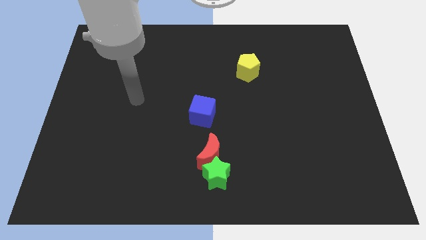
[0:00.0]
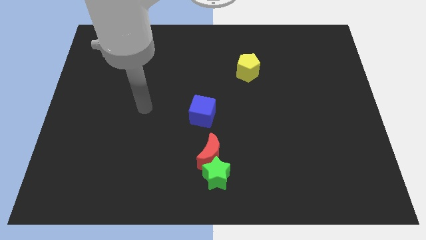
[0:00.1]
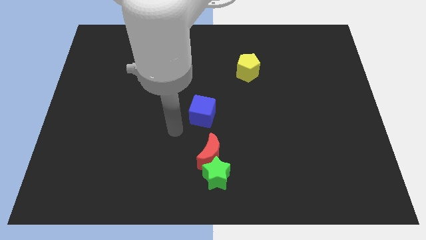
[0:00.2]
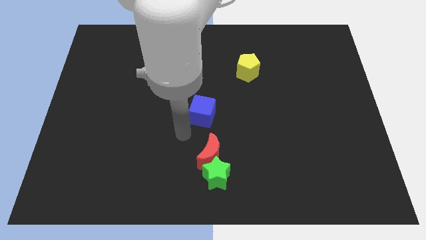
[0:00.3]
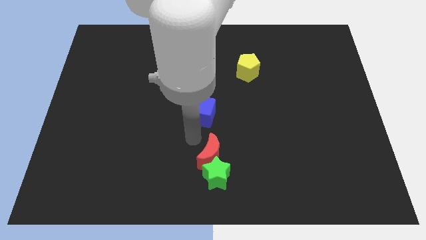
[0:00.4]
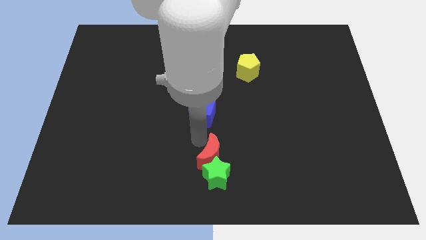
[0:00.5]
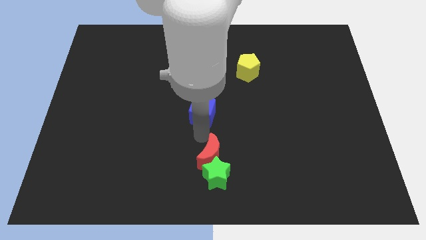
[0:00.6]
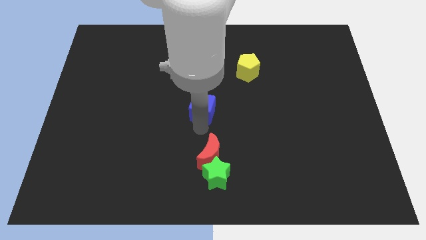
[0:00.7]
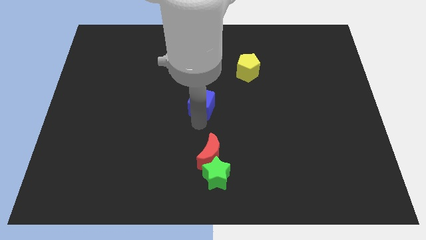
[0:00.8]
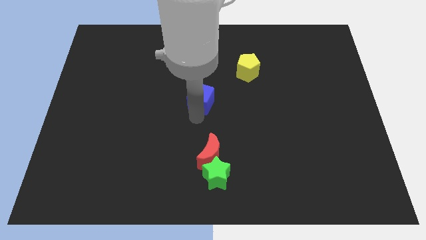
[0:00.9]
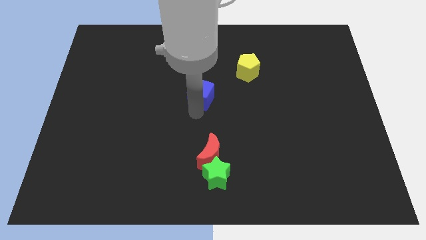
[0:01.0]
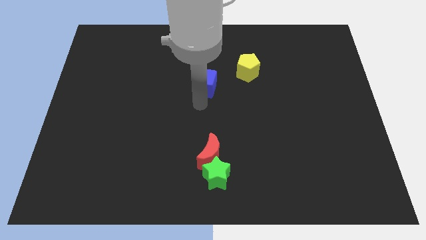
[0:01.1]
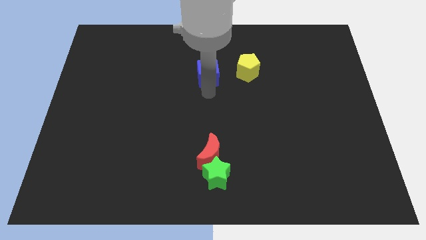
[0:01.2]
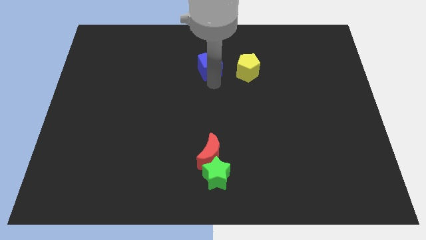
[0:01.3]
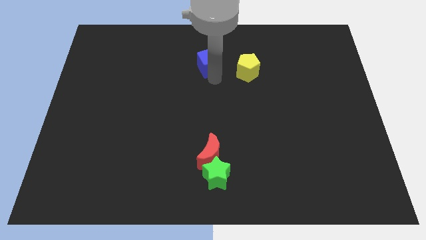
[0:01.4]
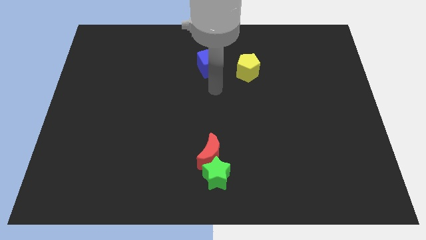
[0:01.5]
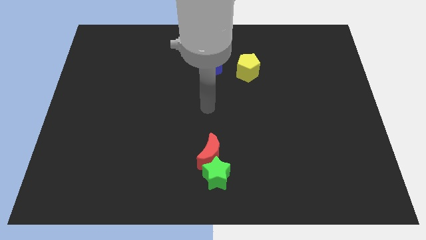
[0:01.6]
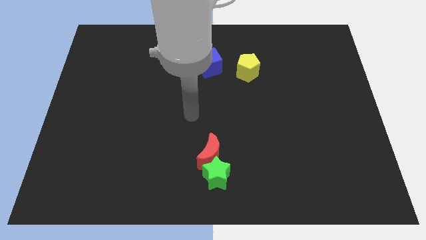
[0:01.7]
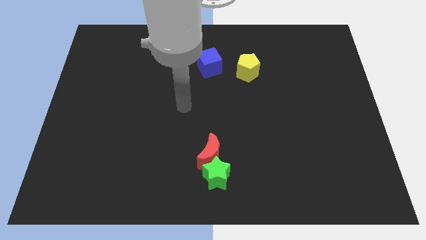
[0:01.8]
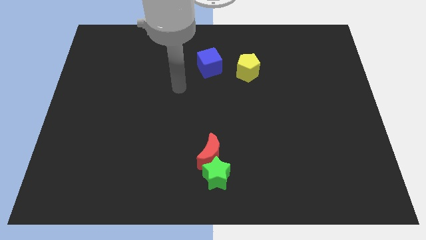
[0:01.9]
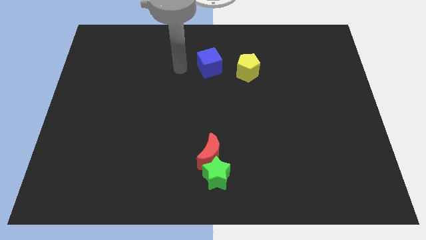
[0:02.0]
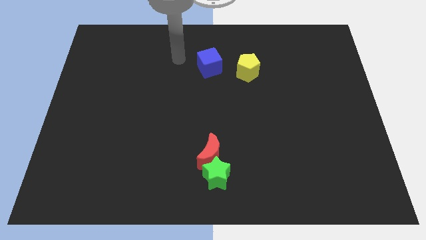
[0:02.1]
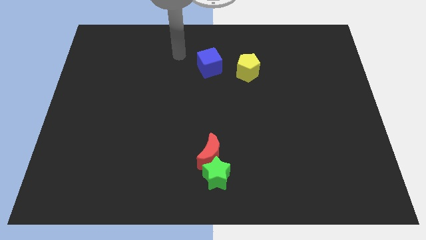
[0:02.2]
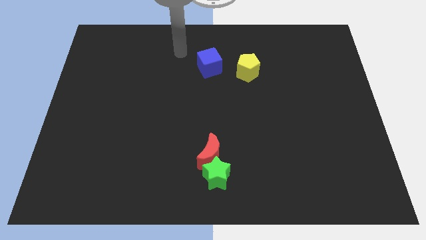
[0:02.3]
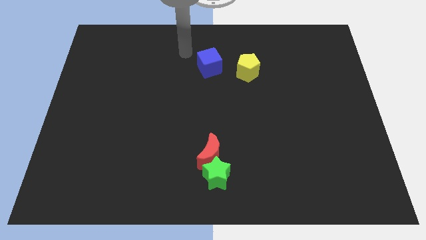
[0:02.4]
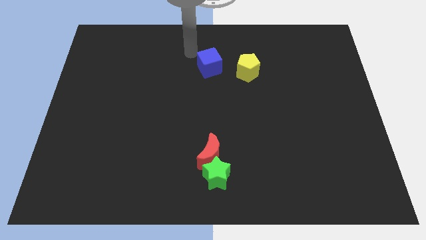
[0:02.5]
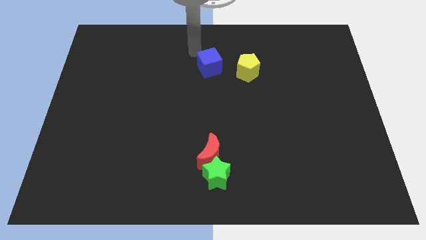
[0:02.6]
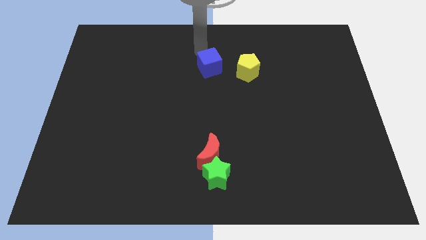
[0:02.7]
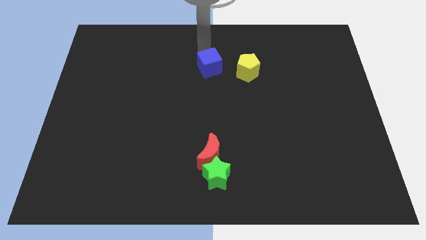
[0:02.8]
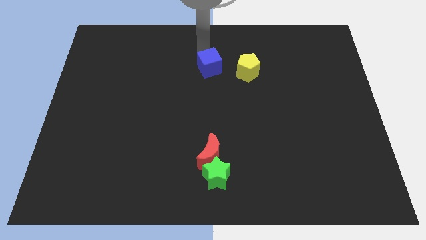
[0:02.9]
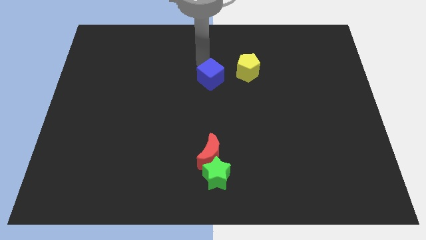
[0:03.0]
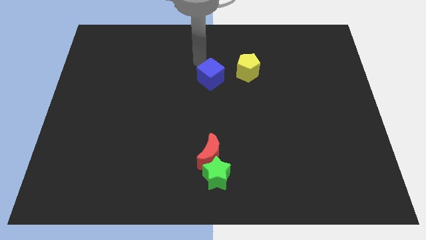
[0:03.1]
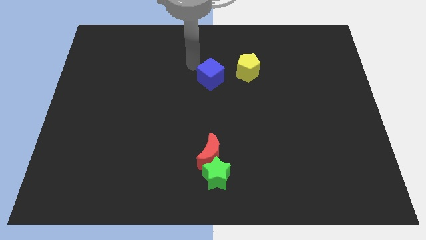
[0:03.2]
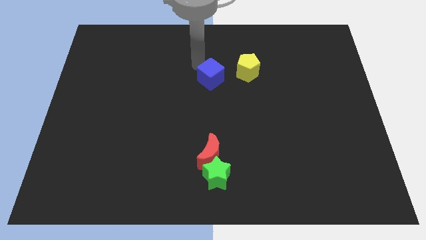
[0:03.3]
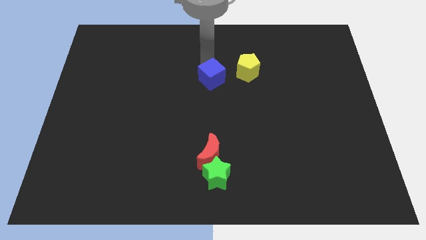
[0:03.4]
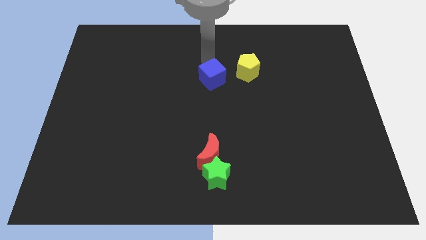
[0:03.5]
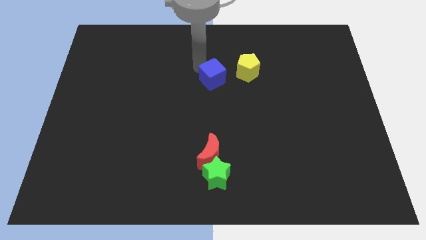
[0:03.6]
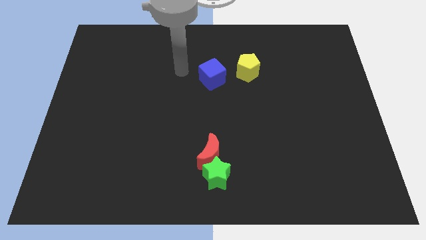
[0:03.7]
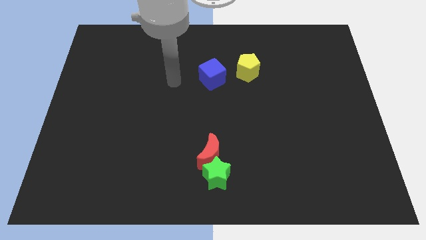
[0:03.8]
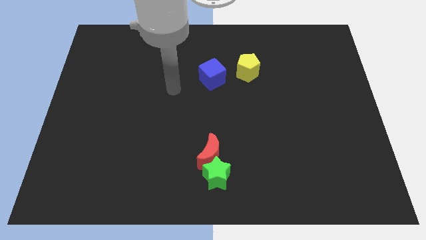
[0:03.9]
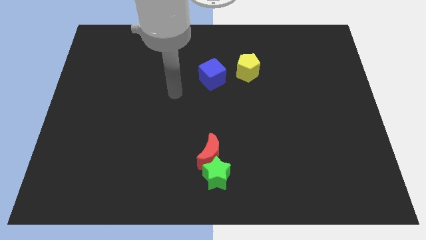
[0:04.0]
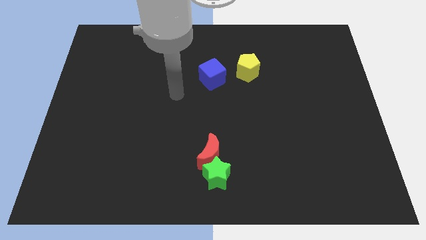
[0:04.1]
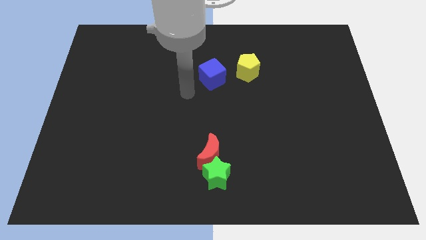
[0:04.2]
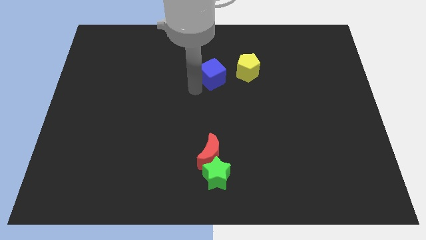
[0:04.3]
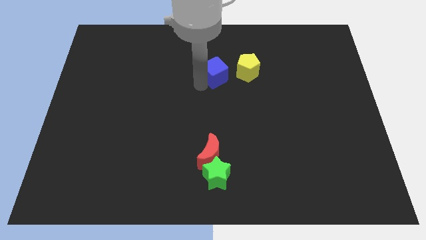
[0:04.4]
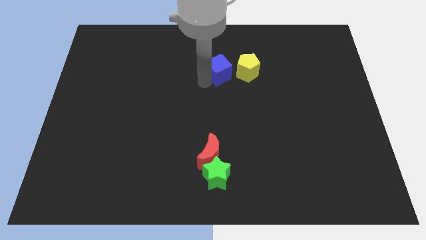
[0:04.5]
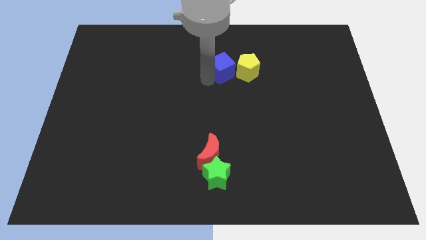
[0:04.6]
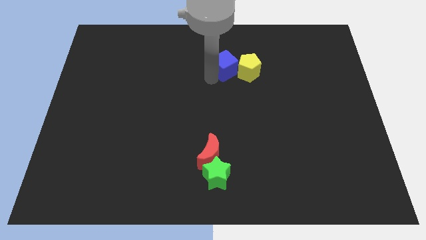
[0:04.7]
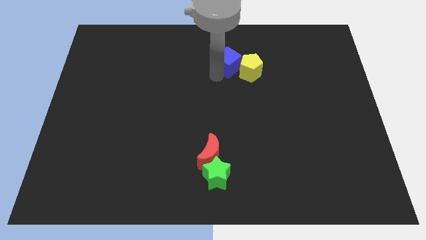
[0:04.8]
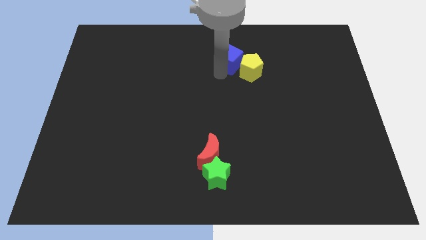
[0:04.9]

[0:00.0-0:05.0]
push the cube towards the yellow block

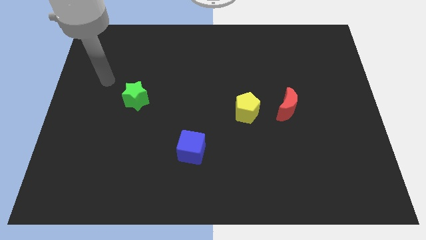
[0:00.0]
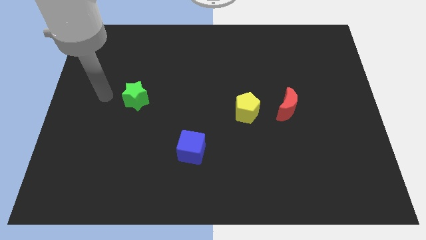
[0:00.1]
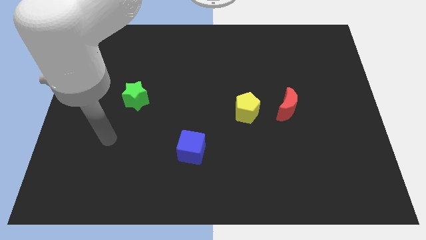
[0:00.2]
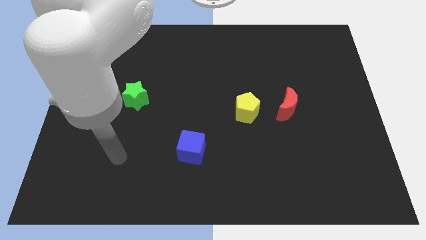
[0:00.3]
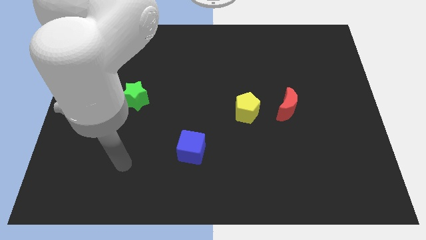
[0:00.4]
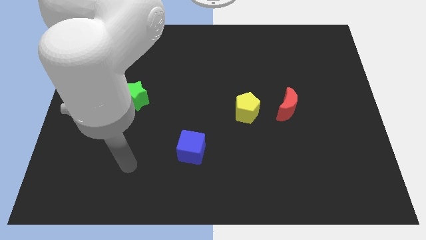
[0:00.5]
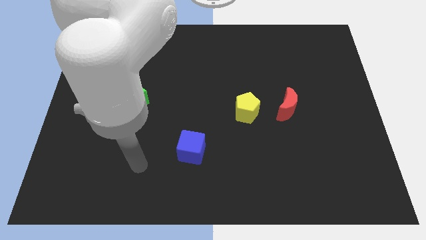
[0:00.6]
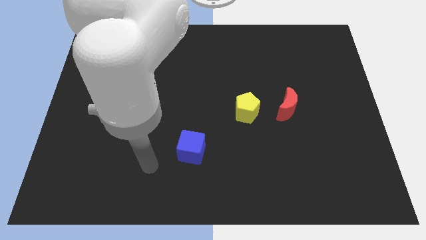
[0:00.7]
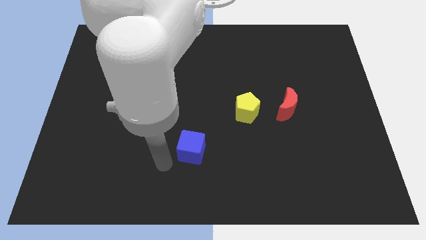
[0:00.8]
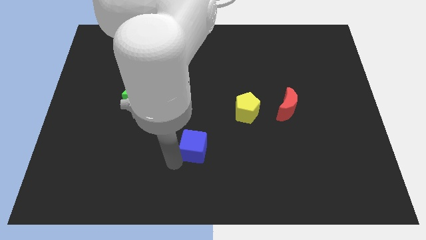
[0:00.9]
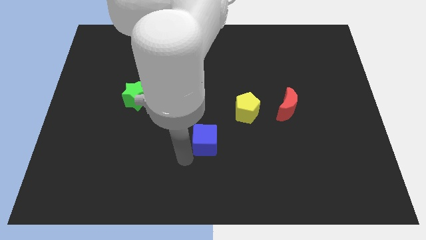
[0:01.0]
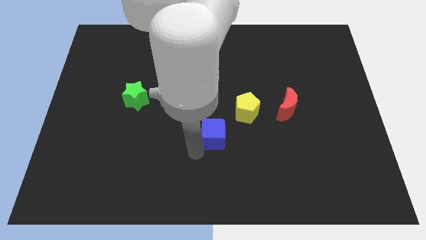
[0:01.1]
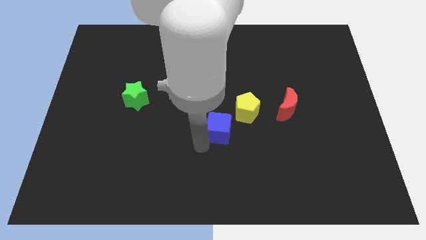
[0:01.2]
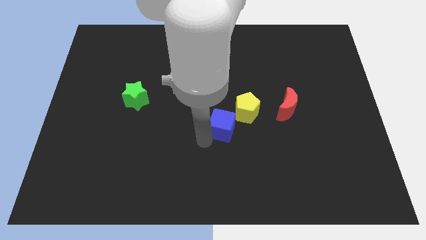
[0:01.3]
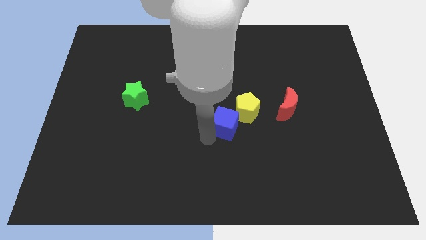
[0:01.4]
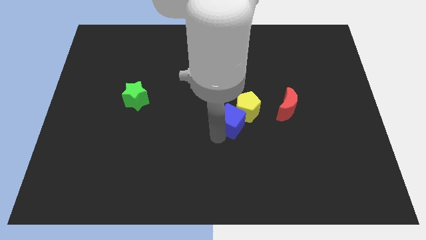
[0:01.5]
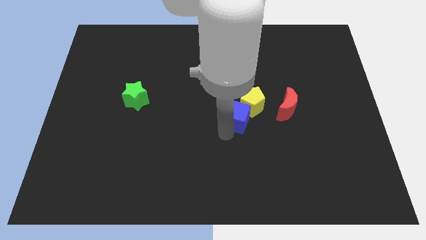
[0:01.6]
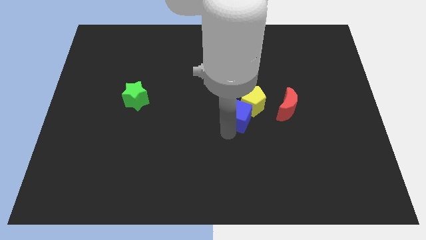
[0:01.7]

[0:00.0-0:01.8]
push the cube next to the yellow block

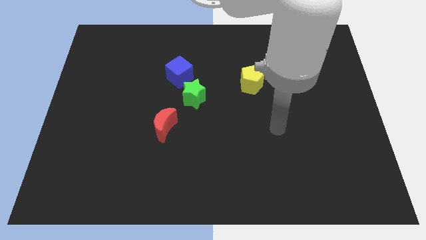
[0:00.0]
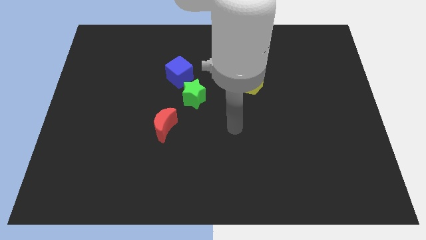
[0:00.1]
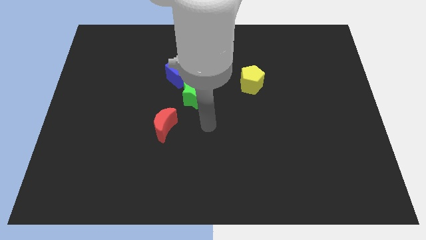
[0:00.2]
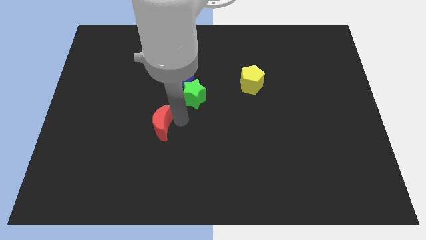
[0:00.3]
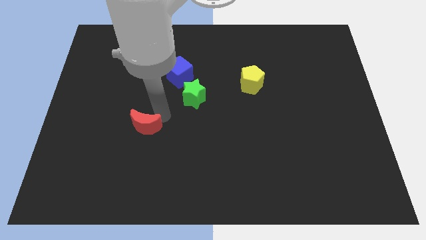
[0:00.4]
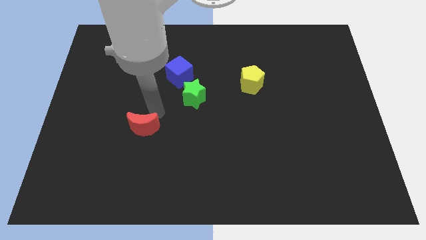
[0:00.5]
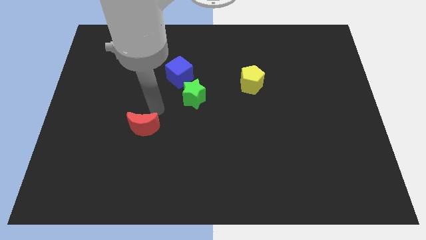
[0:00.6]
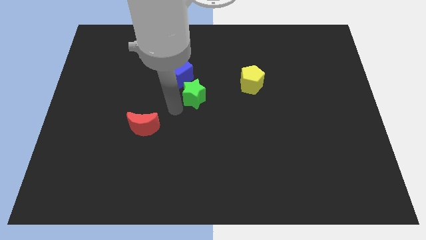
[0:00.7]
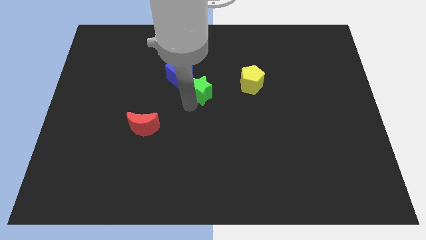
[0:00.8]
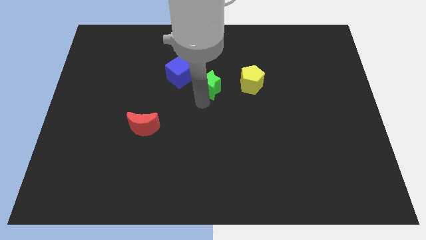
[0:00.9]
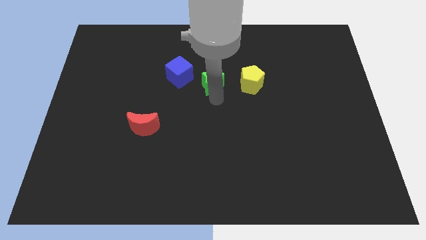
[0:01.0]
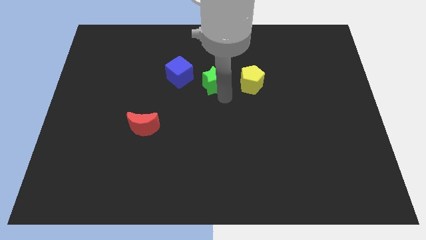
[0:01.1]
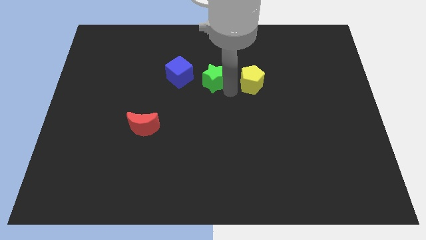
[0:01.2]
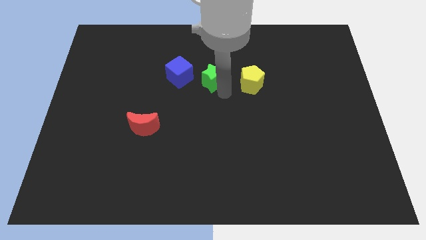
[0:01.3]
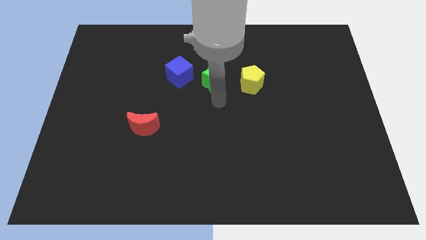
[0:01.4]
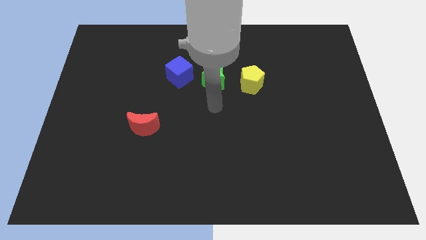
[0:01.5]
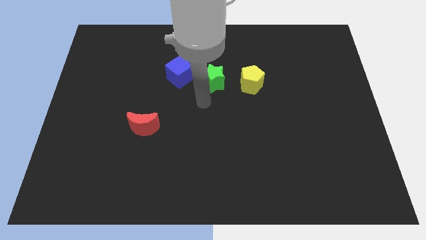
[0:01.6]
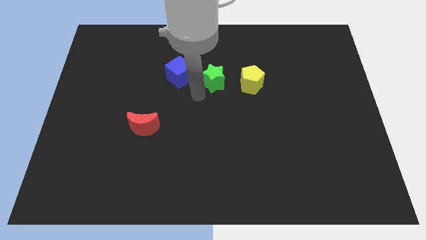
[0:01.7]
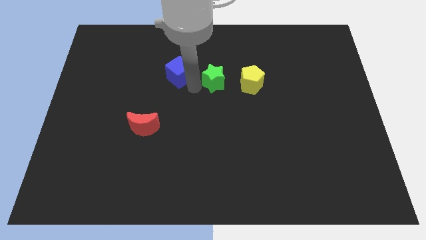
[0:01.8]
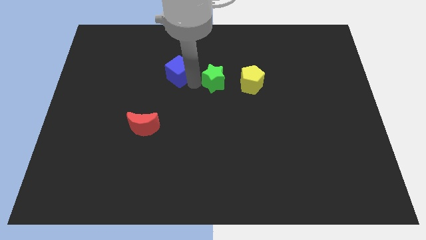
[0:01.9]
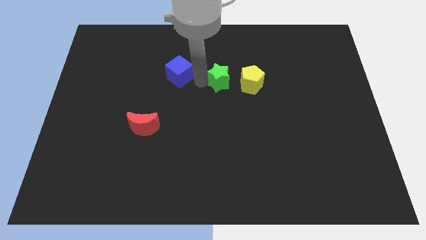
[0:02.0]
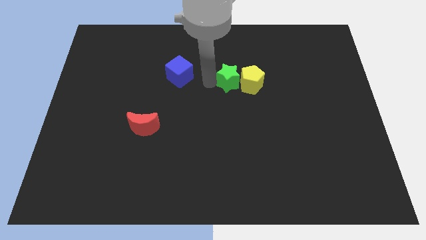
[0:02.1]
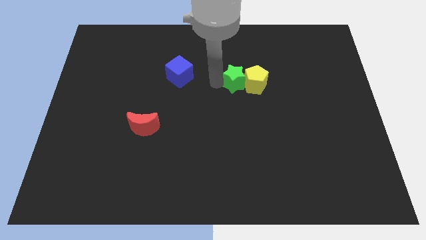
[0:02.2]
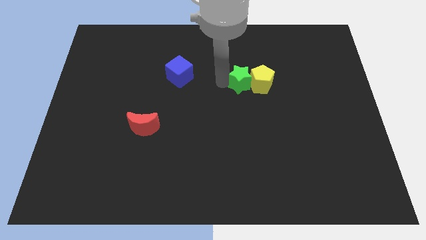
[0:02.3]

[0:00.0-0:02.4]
push the green star next to the yellow block
